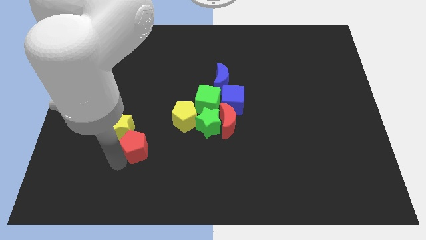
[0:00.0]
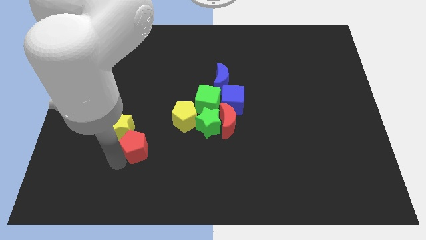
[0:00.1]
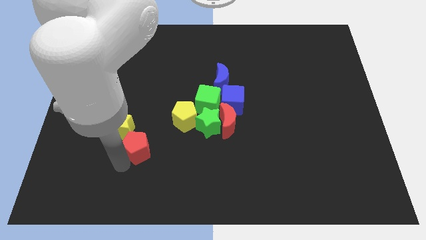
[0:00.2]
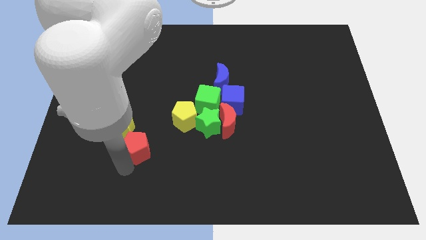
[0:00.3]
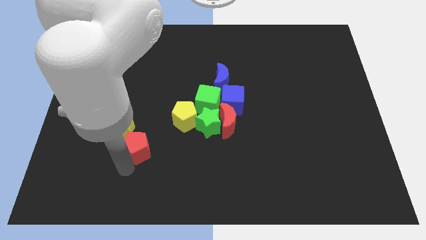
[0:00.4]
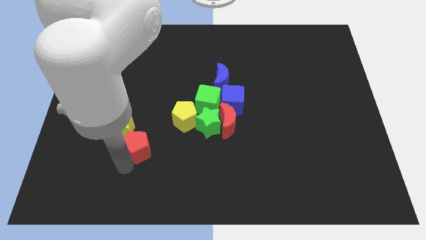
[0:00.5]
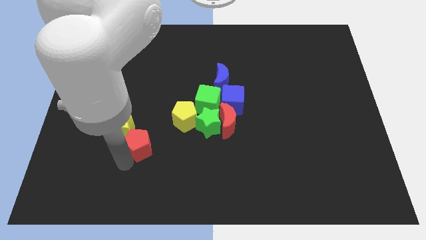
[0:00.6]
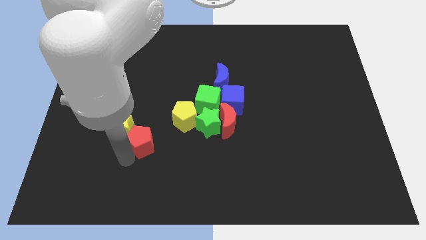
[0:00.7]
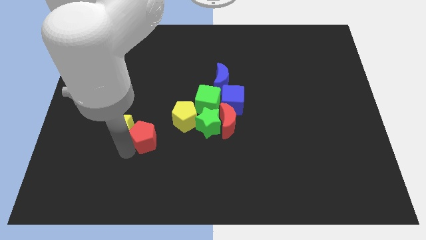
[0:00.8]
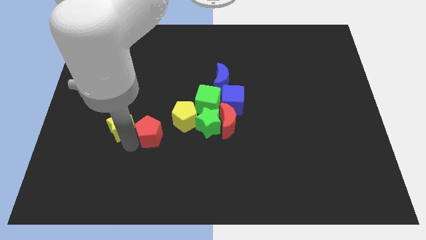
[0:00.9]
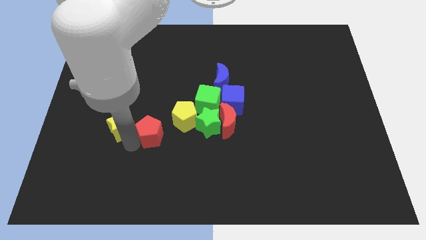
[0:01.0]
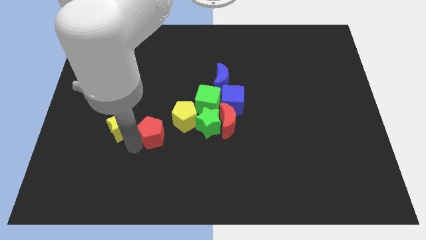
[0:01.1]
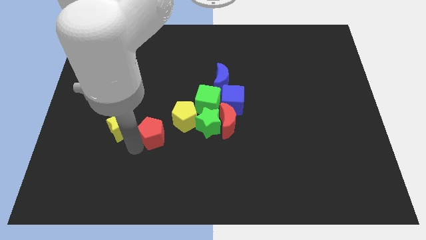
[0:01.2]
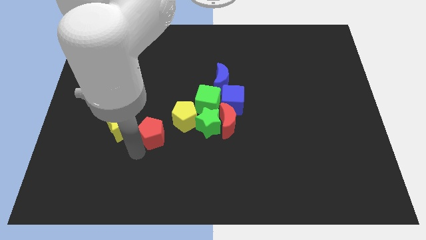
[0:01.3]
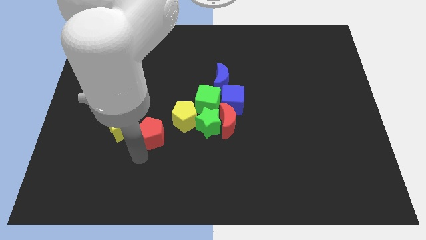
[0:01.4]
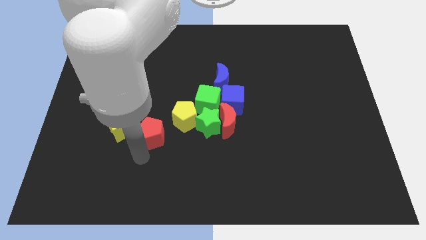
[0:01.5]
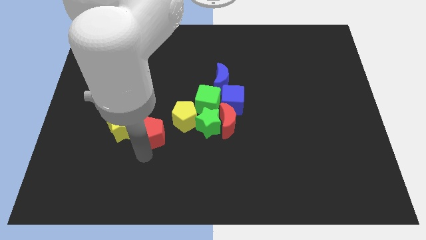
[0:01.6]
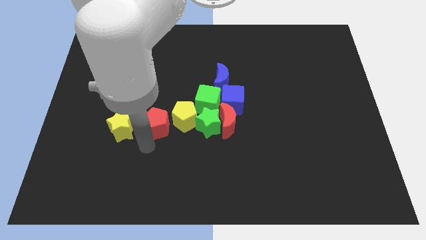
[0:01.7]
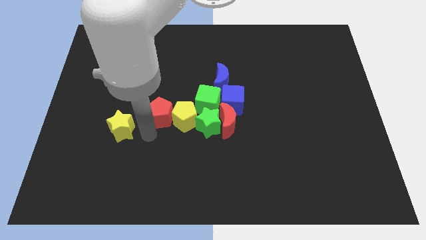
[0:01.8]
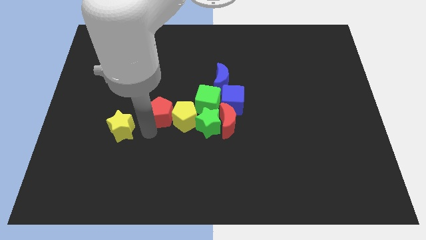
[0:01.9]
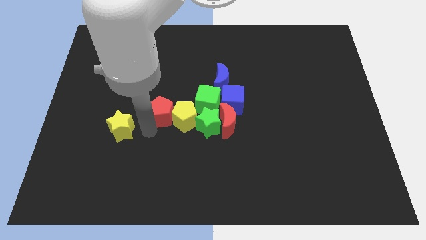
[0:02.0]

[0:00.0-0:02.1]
separate red pentagon from yellow star

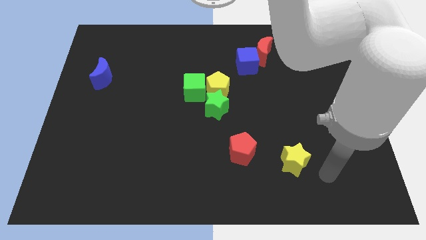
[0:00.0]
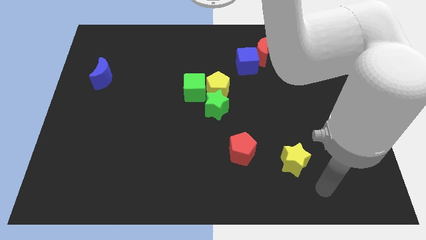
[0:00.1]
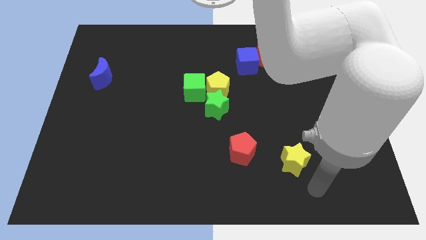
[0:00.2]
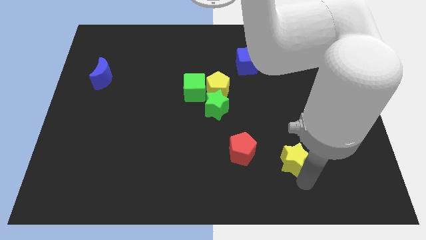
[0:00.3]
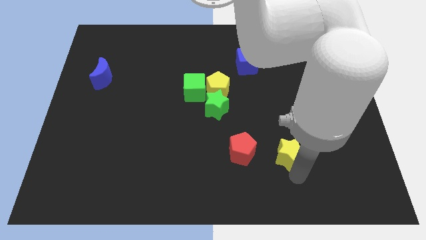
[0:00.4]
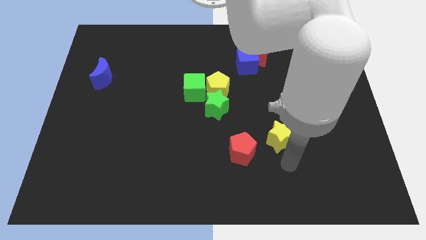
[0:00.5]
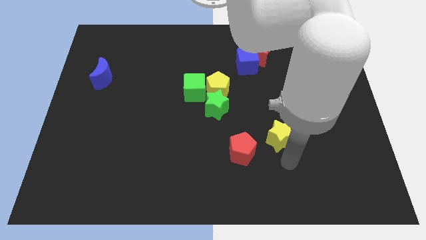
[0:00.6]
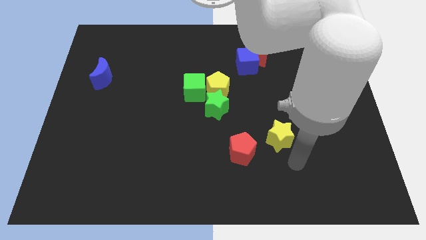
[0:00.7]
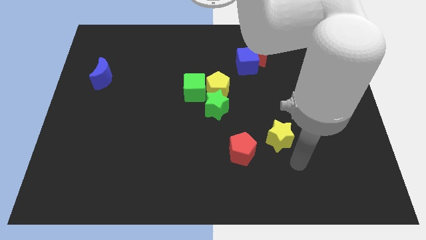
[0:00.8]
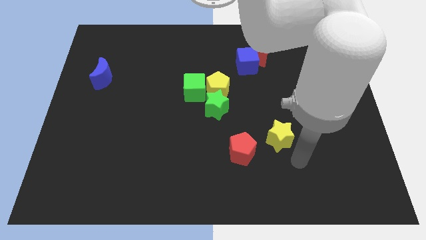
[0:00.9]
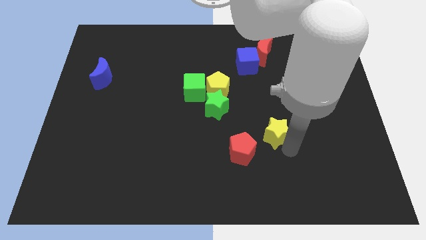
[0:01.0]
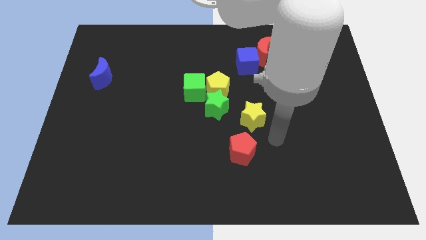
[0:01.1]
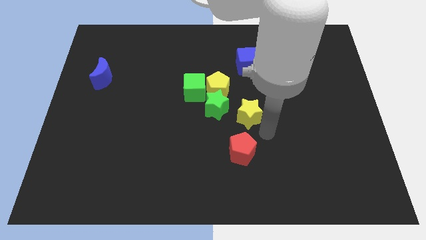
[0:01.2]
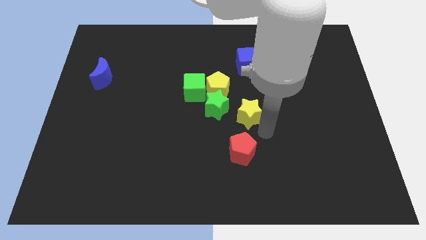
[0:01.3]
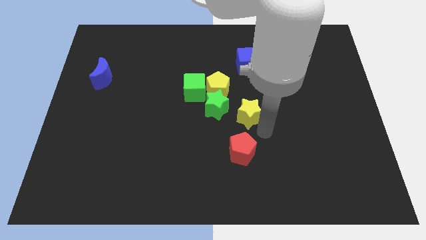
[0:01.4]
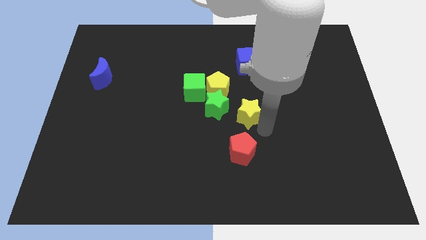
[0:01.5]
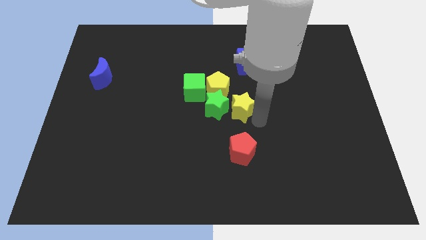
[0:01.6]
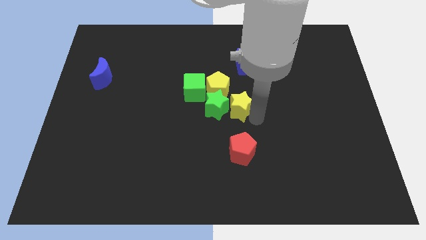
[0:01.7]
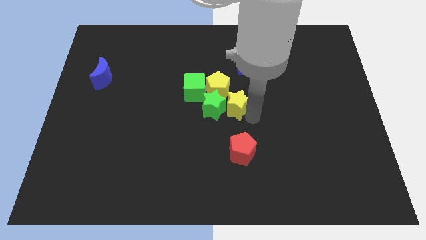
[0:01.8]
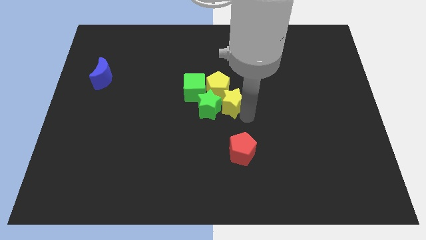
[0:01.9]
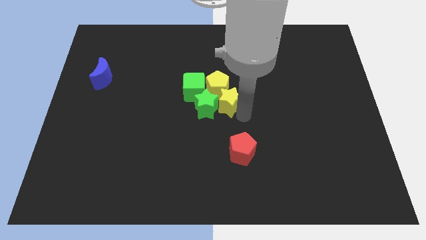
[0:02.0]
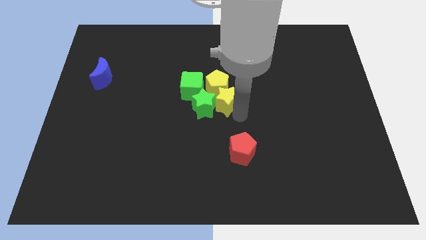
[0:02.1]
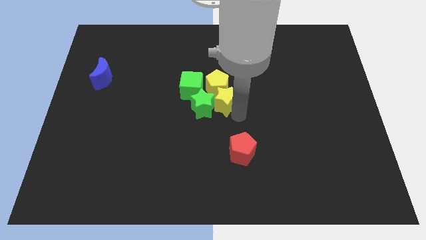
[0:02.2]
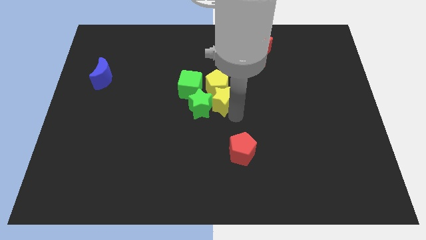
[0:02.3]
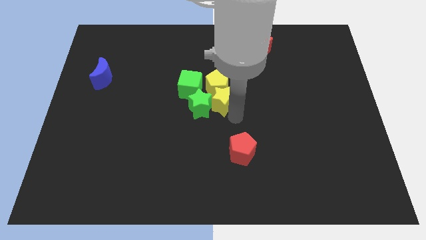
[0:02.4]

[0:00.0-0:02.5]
move the yellow star to the right side of the green star

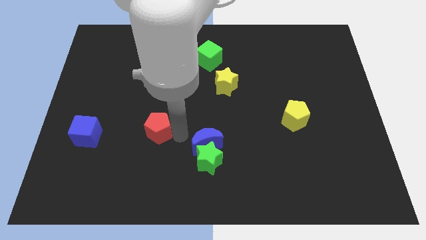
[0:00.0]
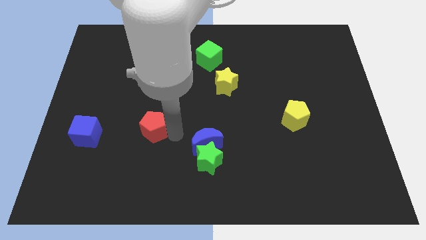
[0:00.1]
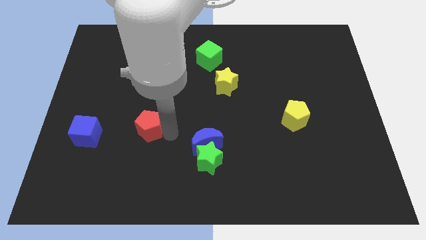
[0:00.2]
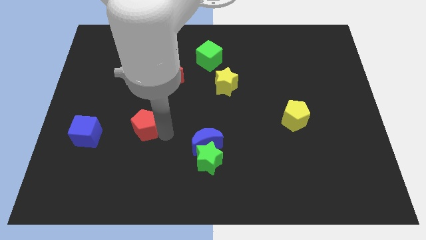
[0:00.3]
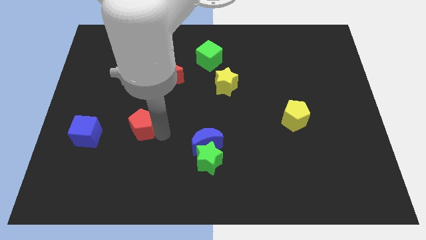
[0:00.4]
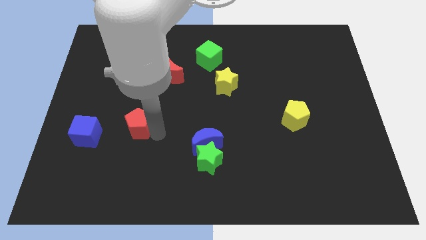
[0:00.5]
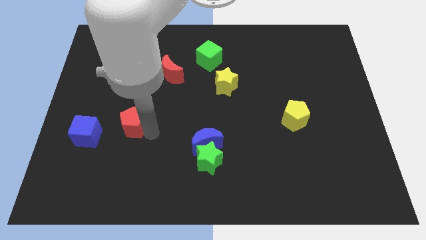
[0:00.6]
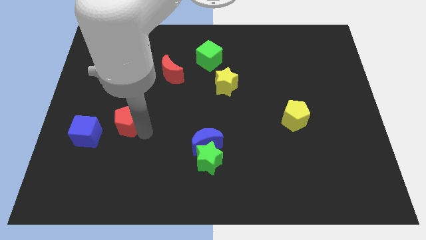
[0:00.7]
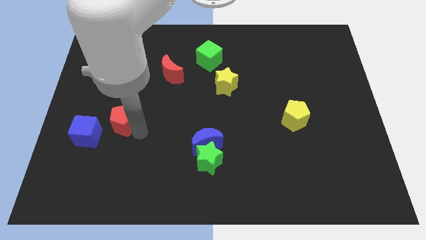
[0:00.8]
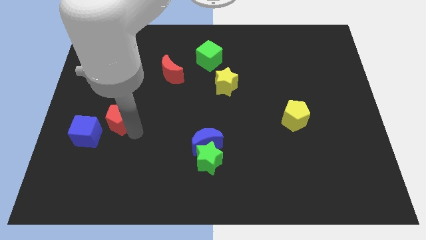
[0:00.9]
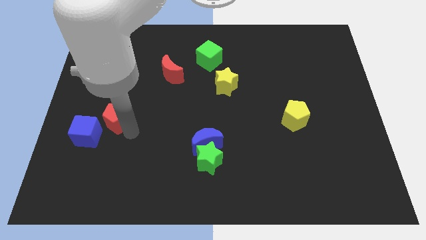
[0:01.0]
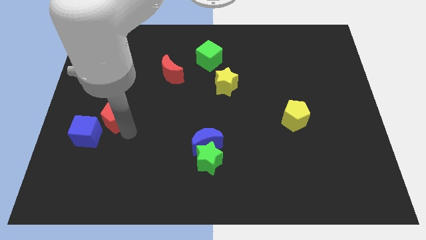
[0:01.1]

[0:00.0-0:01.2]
push the red pentagon slightly to the left

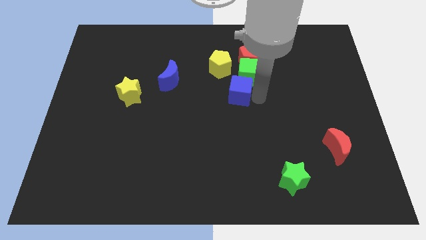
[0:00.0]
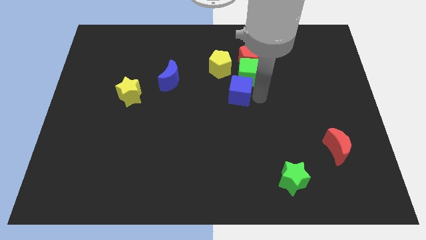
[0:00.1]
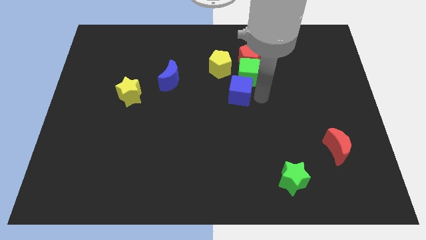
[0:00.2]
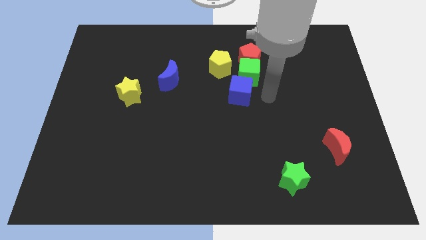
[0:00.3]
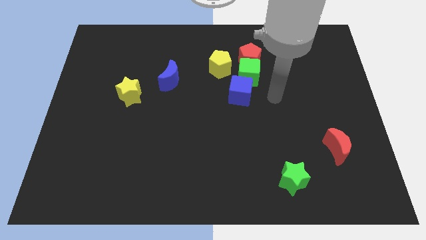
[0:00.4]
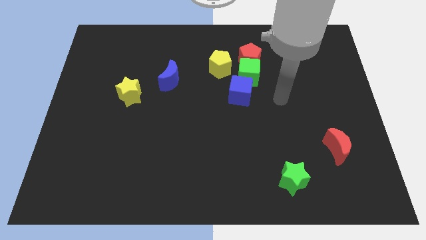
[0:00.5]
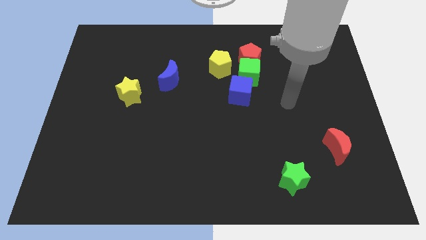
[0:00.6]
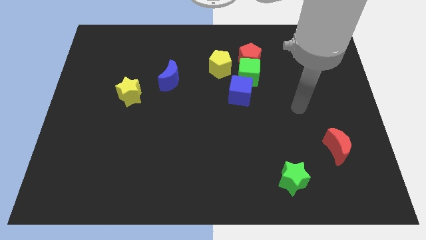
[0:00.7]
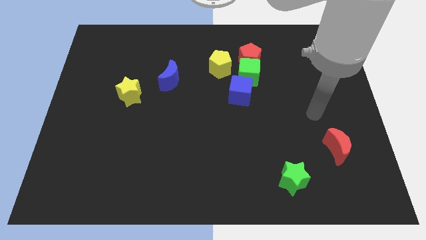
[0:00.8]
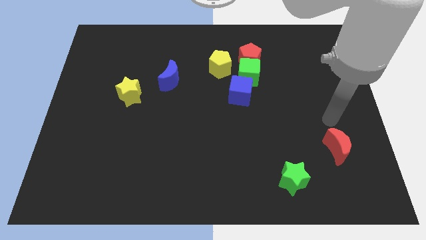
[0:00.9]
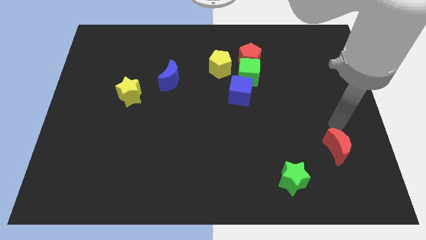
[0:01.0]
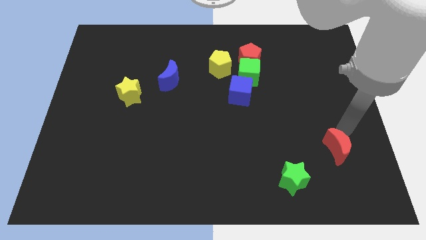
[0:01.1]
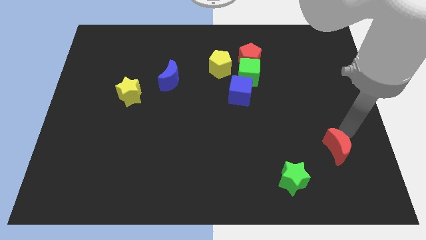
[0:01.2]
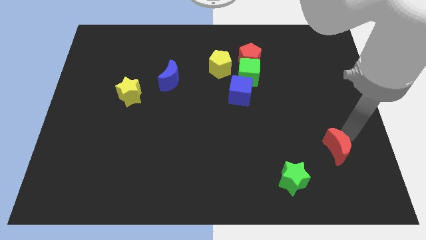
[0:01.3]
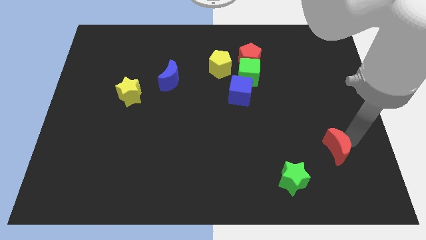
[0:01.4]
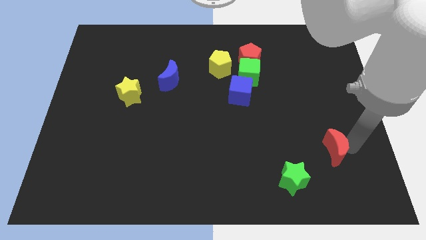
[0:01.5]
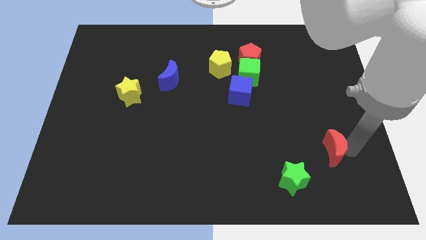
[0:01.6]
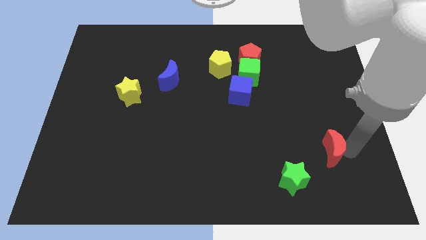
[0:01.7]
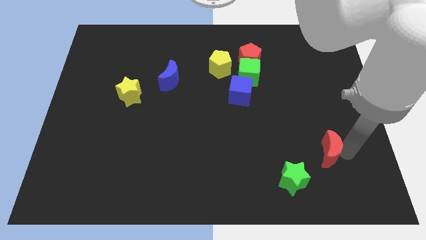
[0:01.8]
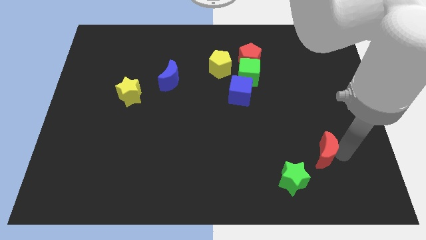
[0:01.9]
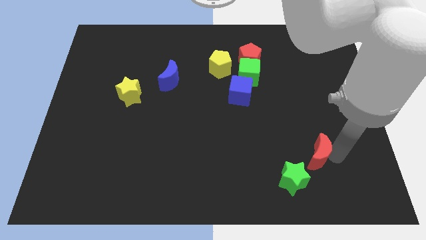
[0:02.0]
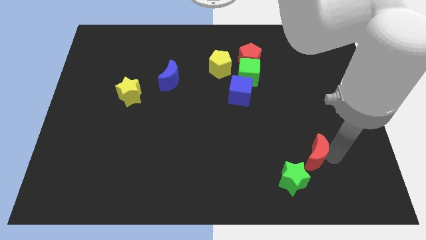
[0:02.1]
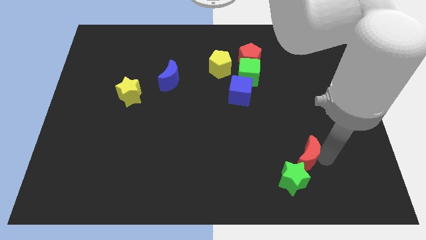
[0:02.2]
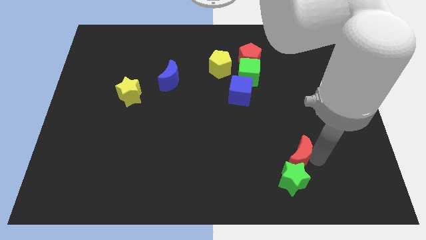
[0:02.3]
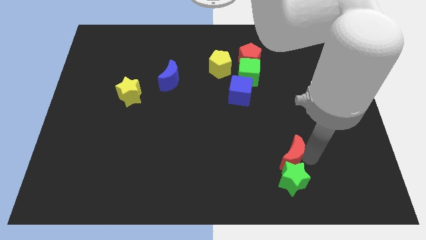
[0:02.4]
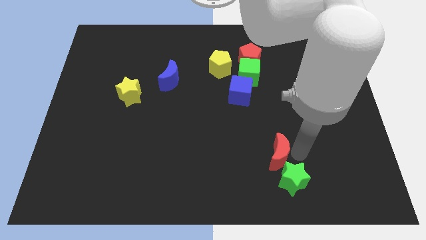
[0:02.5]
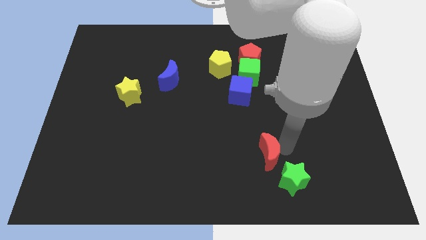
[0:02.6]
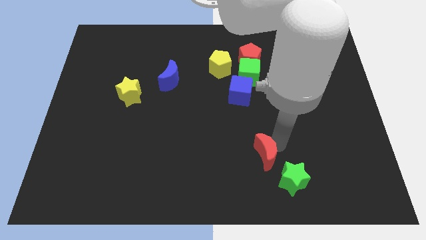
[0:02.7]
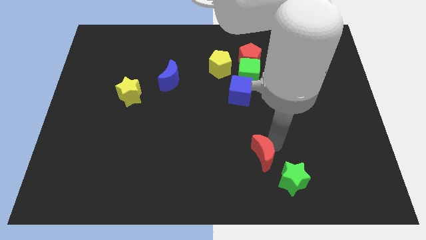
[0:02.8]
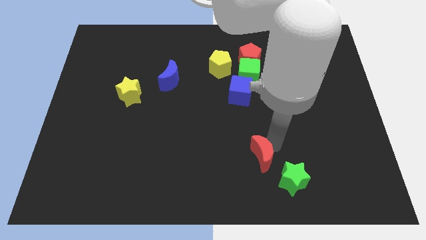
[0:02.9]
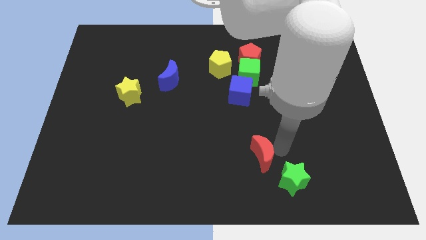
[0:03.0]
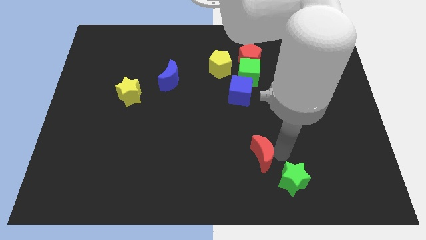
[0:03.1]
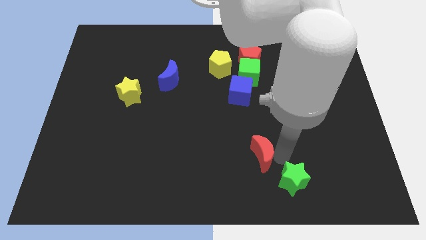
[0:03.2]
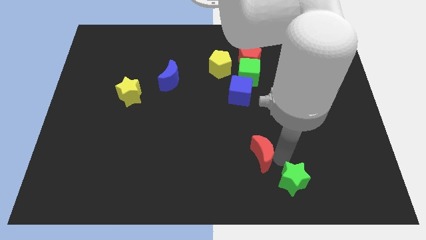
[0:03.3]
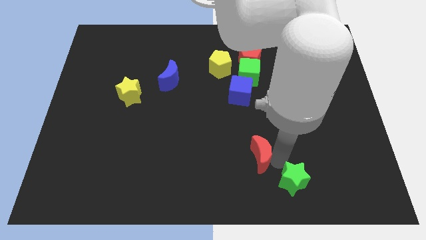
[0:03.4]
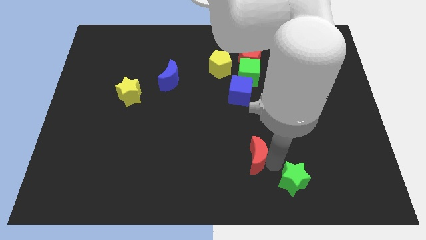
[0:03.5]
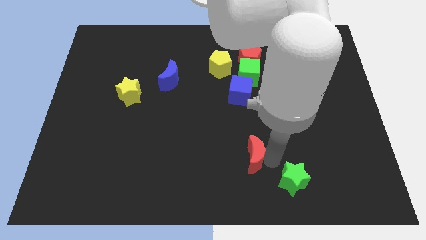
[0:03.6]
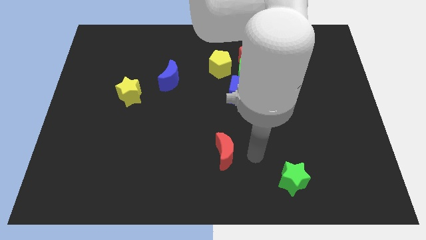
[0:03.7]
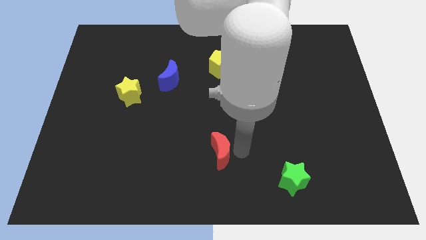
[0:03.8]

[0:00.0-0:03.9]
push the red moon to the left side of the board
